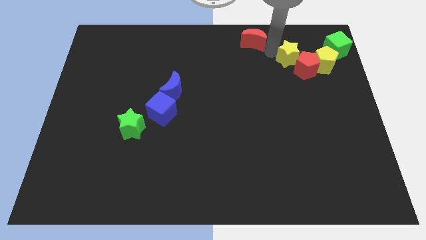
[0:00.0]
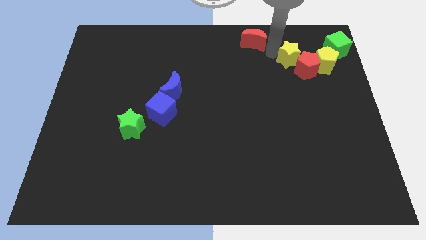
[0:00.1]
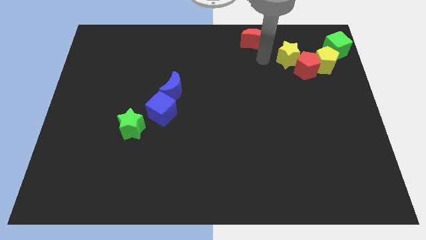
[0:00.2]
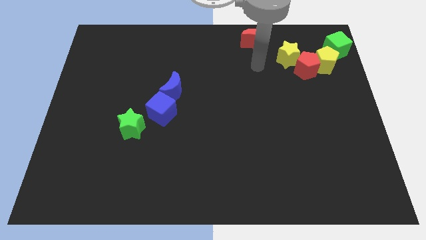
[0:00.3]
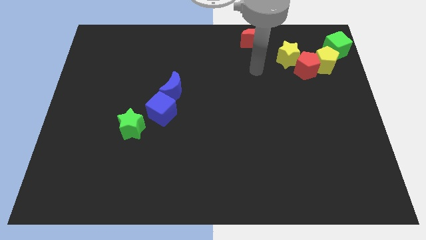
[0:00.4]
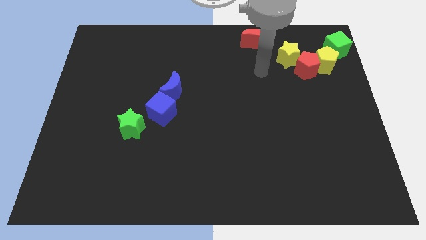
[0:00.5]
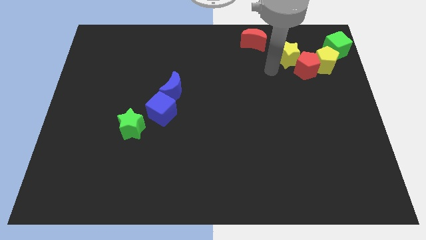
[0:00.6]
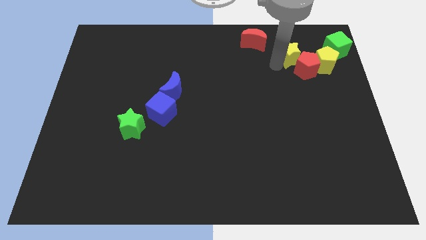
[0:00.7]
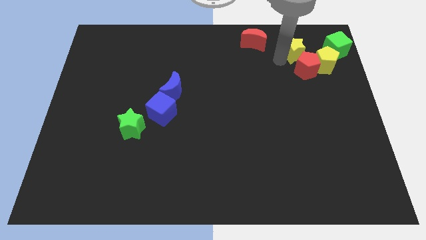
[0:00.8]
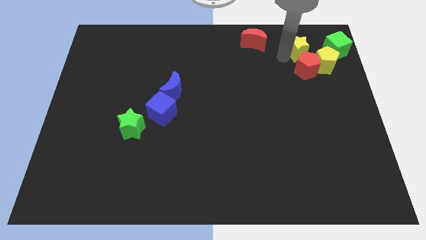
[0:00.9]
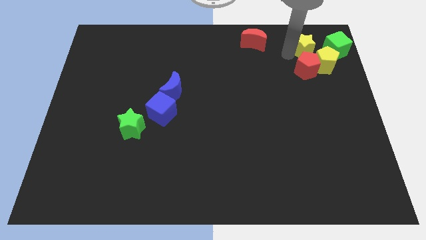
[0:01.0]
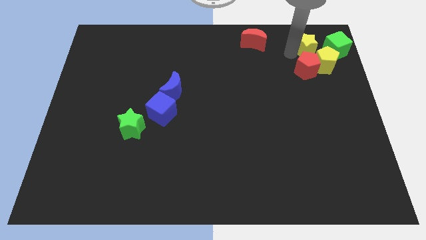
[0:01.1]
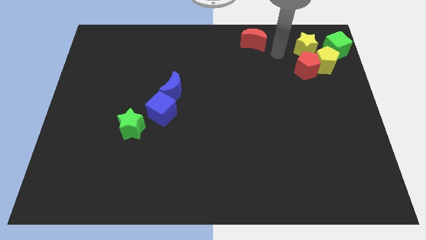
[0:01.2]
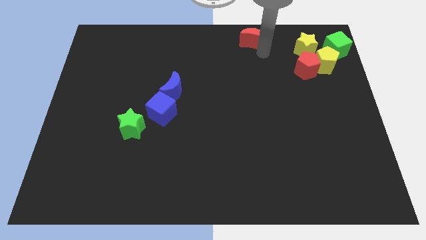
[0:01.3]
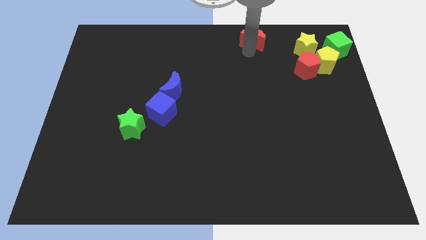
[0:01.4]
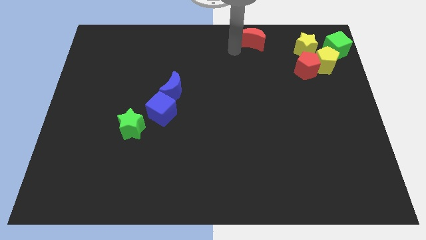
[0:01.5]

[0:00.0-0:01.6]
place the yellow star above the yellow pentagon

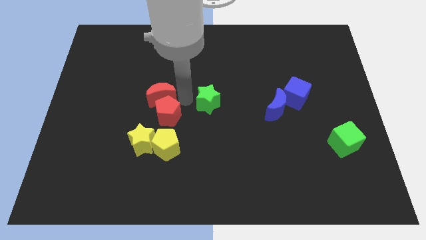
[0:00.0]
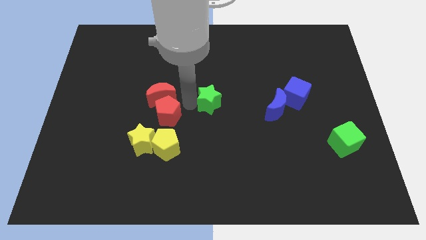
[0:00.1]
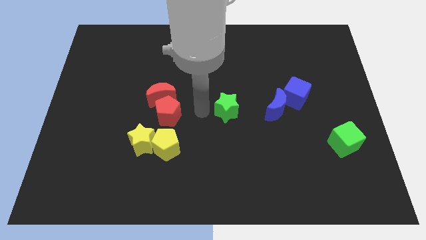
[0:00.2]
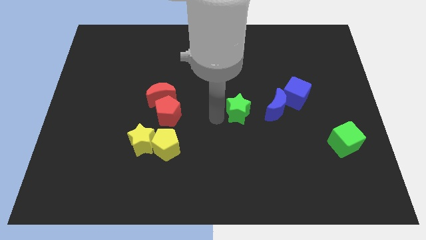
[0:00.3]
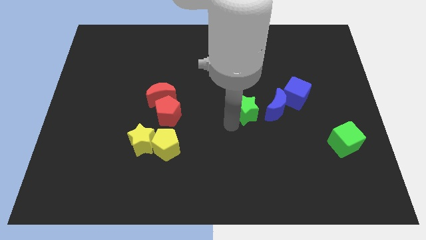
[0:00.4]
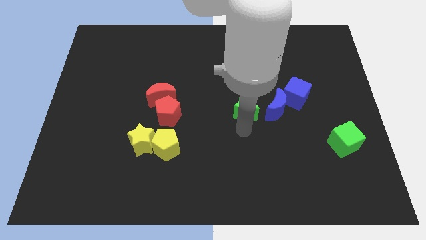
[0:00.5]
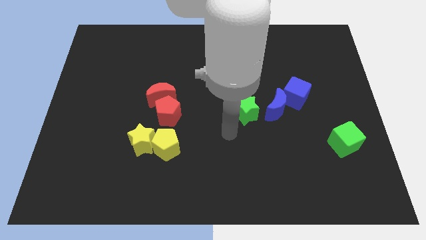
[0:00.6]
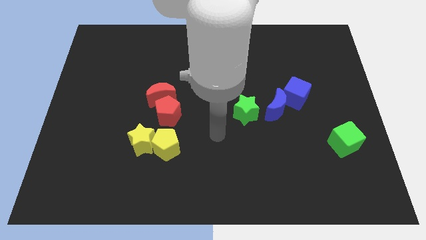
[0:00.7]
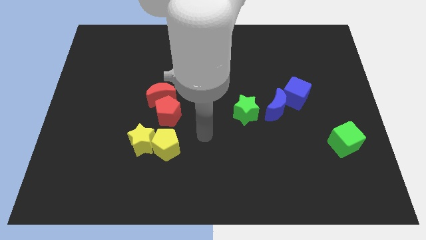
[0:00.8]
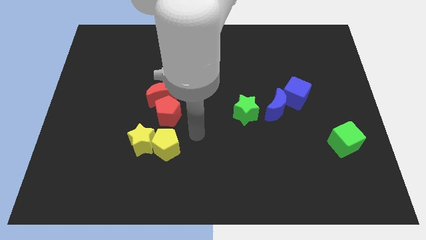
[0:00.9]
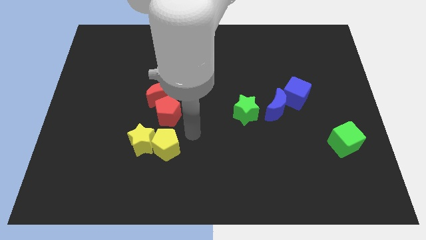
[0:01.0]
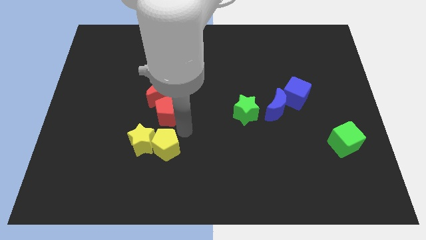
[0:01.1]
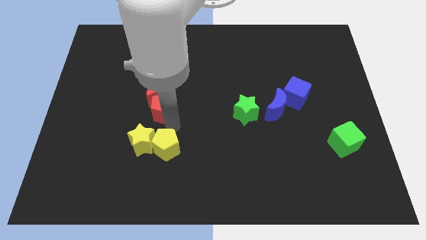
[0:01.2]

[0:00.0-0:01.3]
push the green star to the left of blue moon

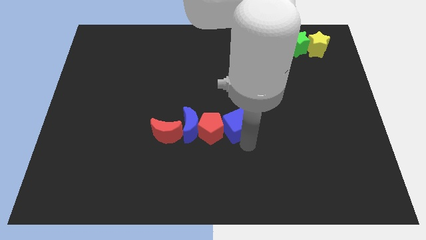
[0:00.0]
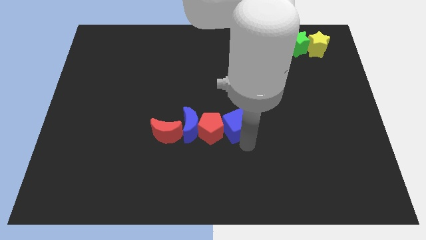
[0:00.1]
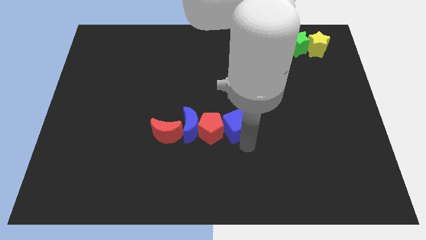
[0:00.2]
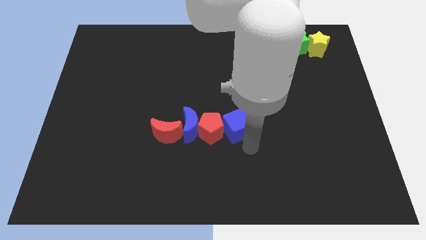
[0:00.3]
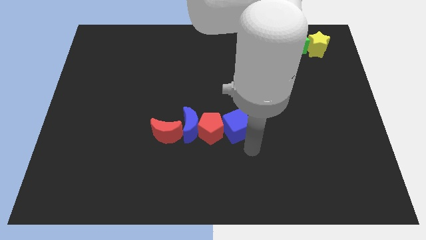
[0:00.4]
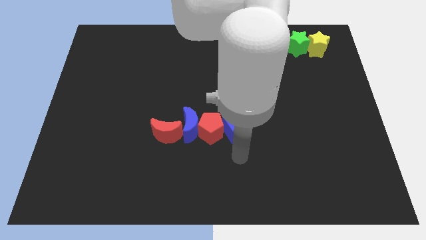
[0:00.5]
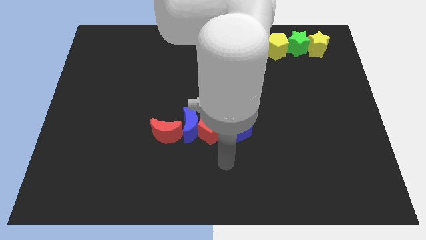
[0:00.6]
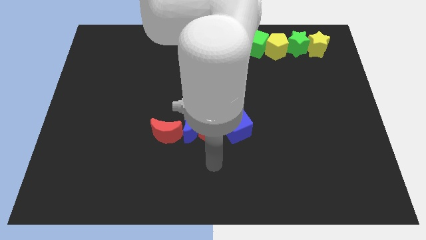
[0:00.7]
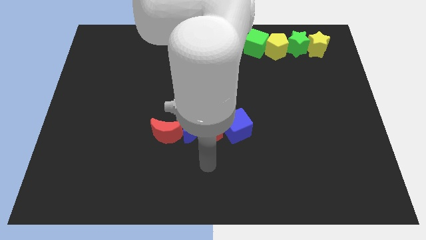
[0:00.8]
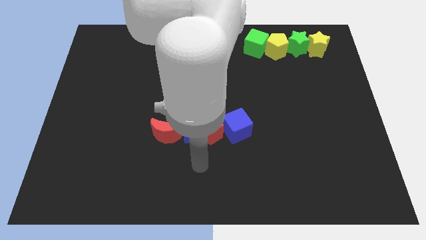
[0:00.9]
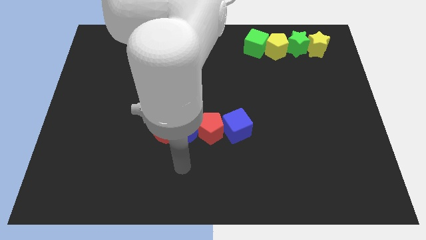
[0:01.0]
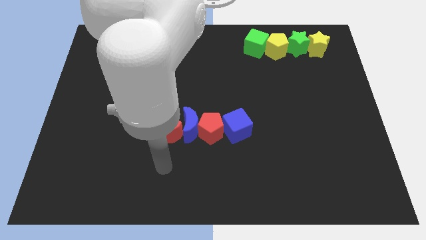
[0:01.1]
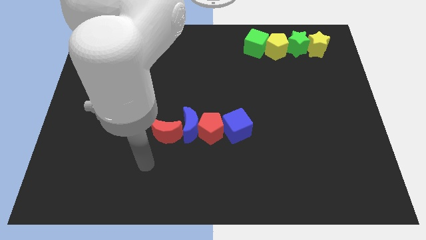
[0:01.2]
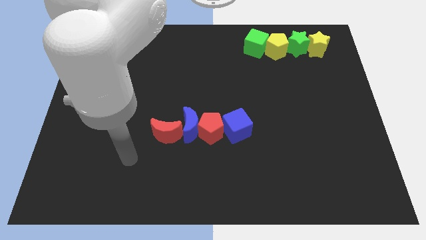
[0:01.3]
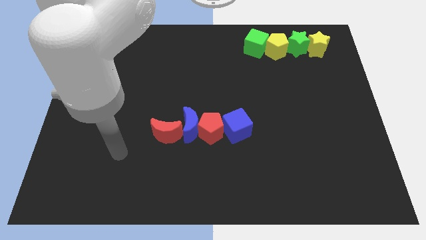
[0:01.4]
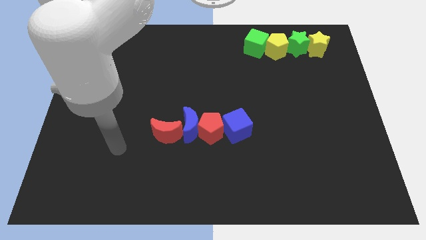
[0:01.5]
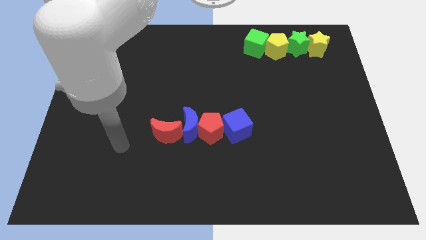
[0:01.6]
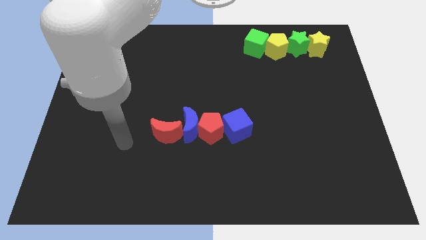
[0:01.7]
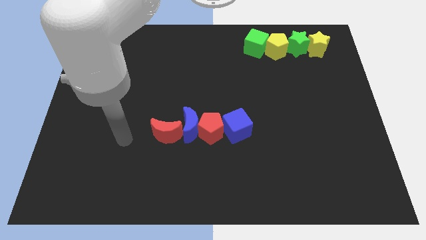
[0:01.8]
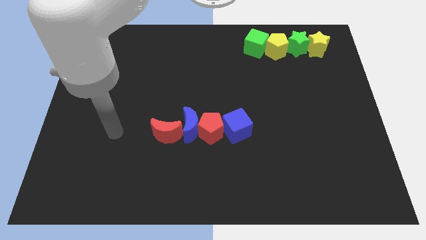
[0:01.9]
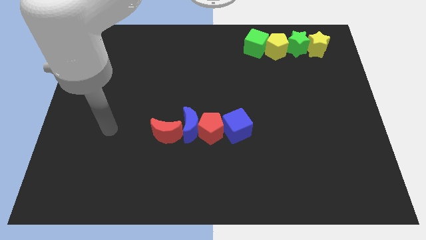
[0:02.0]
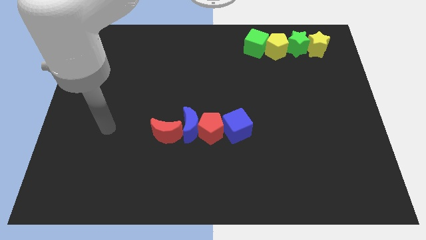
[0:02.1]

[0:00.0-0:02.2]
move your arm to the center left of the board

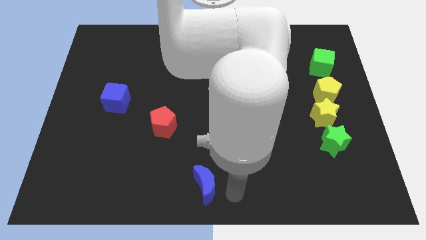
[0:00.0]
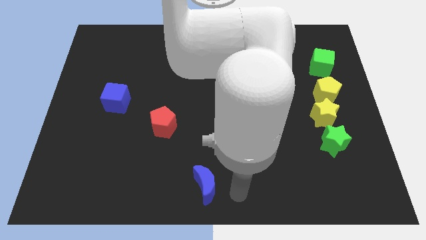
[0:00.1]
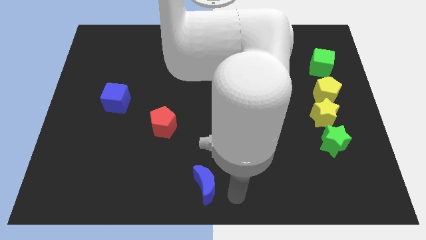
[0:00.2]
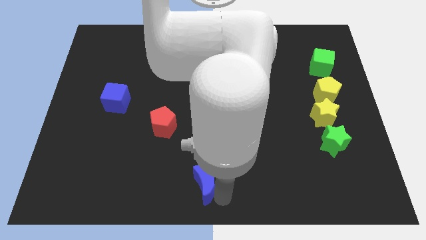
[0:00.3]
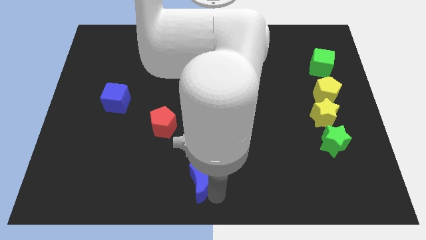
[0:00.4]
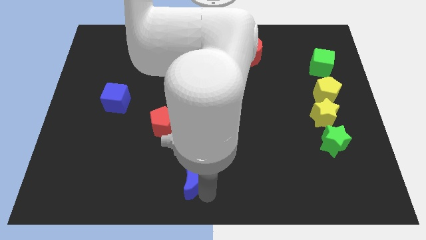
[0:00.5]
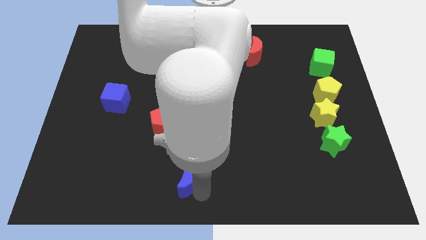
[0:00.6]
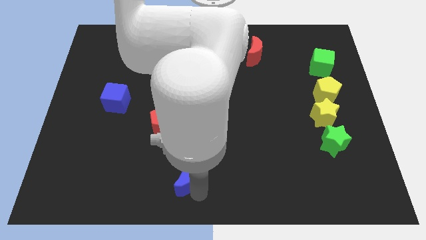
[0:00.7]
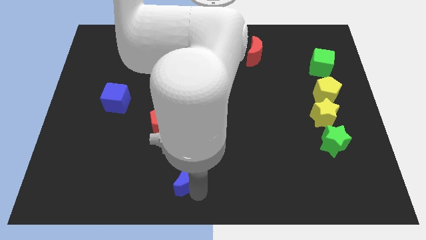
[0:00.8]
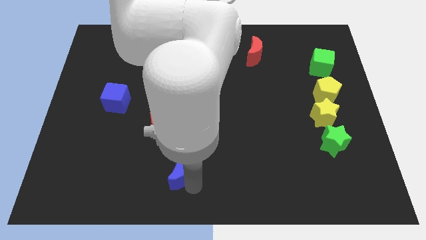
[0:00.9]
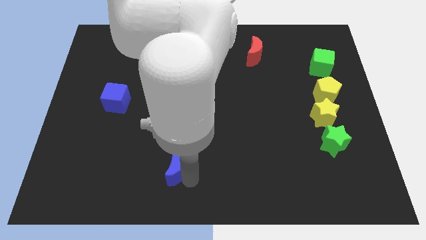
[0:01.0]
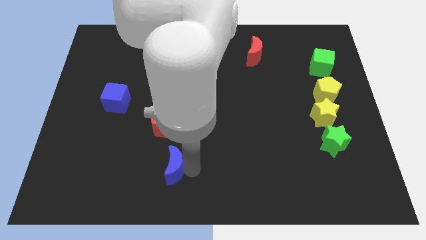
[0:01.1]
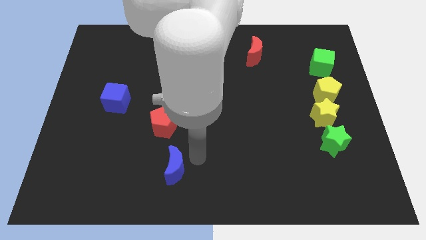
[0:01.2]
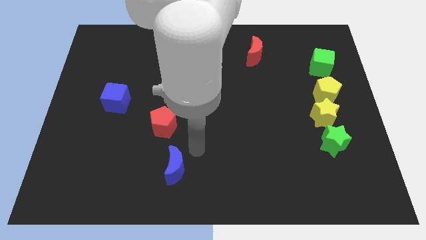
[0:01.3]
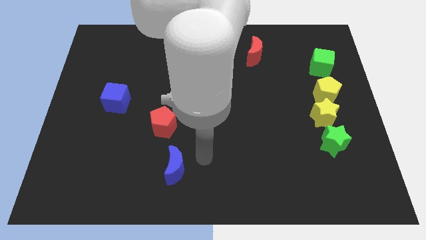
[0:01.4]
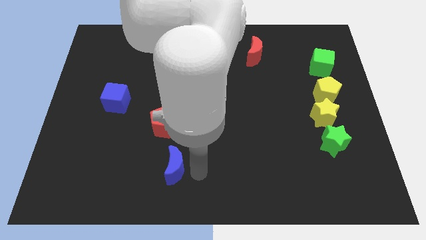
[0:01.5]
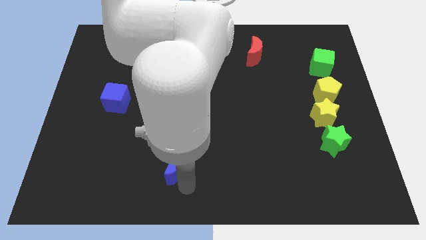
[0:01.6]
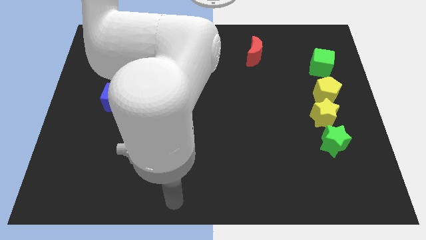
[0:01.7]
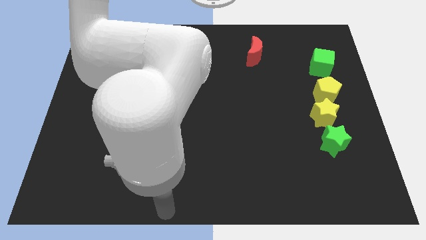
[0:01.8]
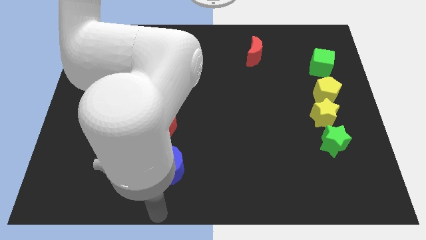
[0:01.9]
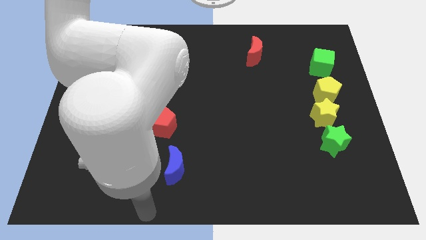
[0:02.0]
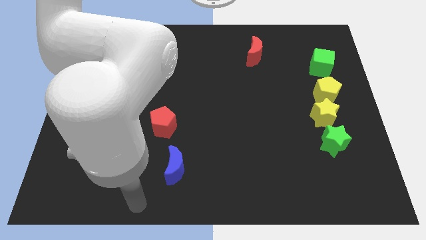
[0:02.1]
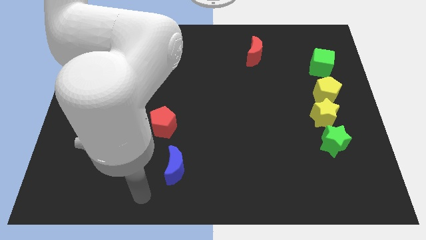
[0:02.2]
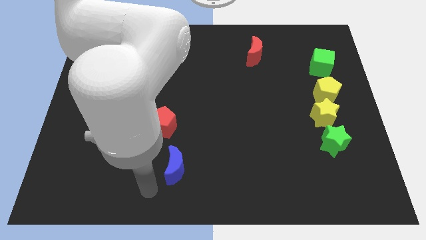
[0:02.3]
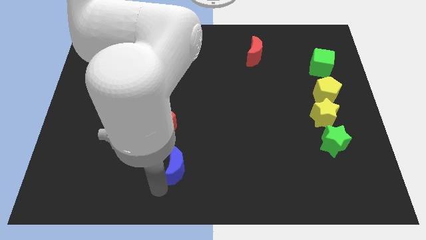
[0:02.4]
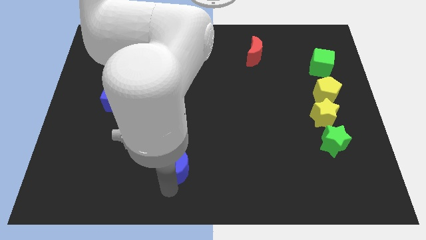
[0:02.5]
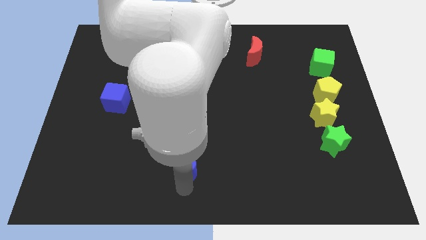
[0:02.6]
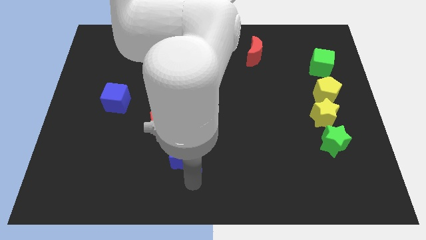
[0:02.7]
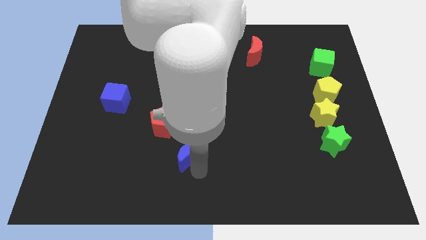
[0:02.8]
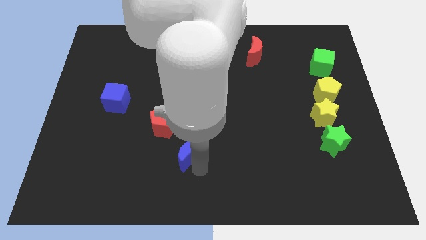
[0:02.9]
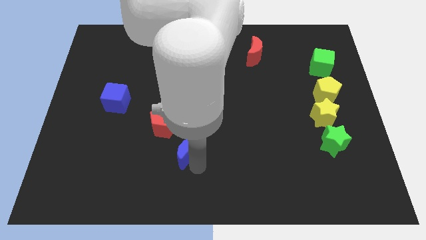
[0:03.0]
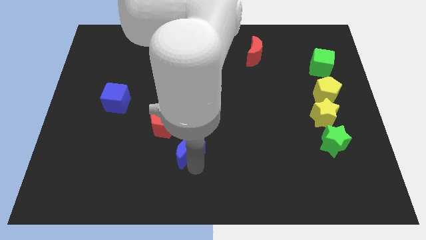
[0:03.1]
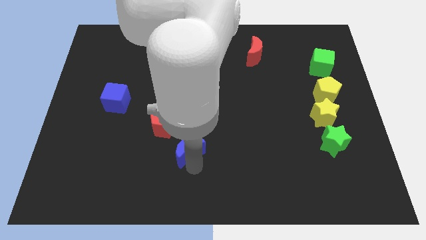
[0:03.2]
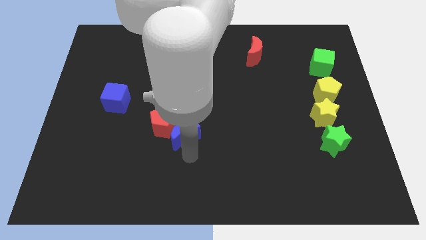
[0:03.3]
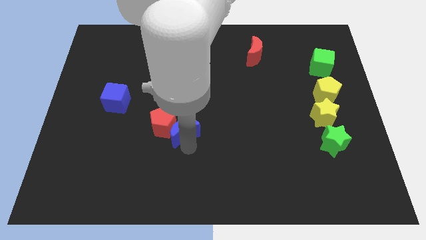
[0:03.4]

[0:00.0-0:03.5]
move the blue crescent into the red pentagon

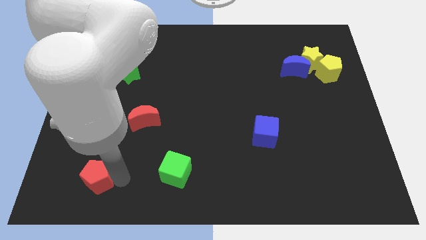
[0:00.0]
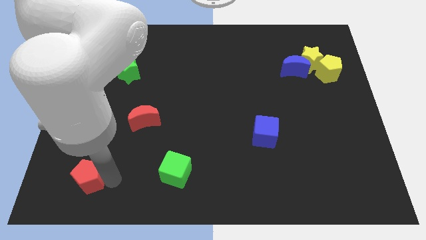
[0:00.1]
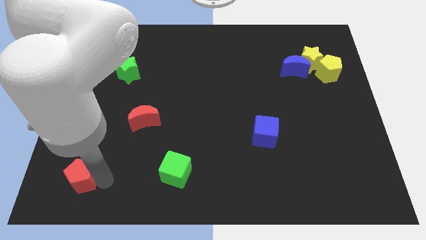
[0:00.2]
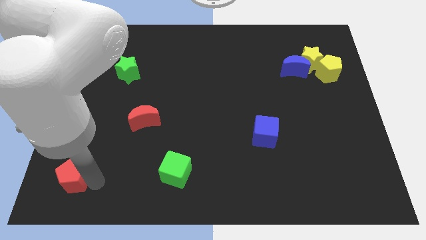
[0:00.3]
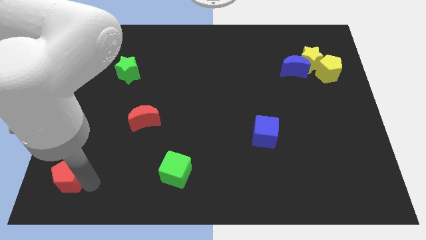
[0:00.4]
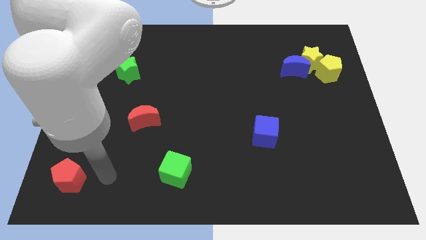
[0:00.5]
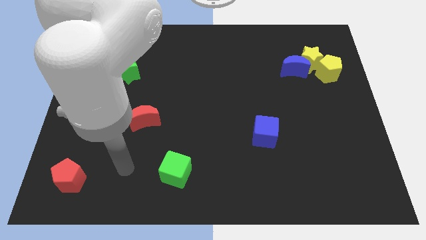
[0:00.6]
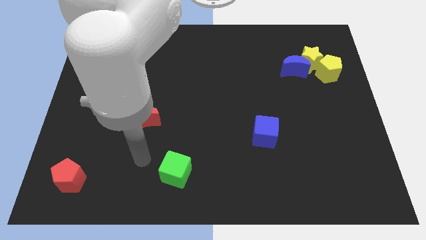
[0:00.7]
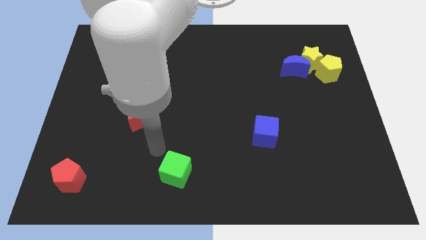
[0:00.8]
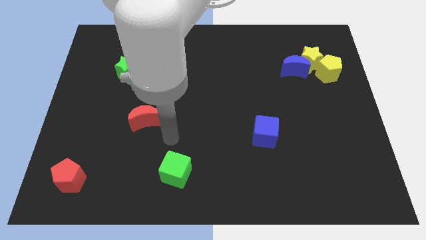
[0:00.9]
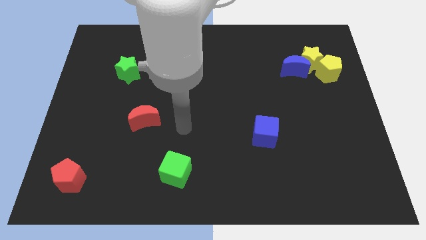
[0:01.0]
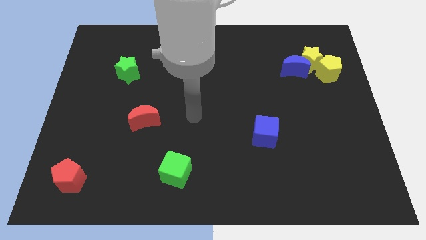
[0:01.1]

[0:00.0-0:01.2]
push the red pentagon bottom left of the board
